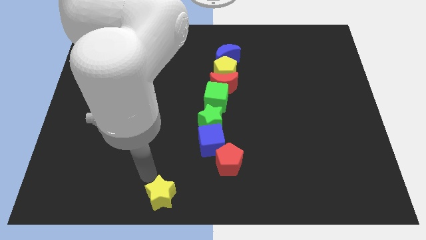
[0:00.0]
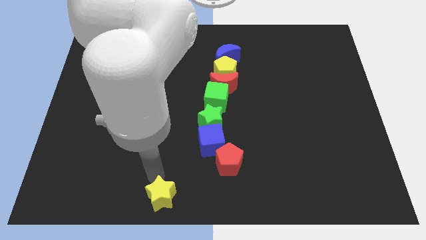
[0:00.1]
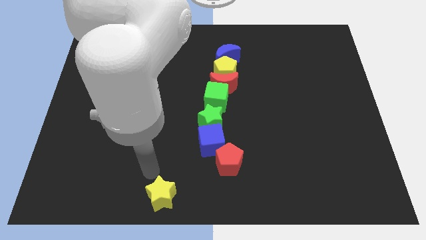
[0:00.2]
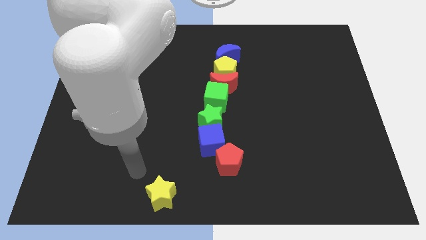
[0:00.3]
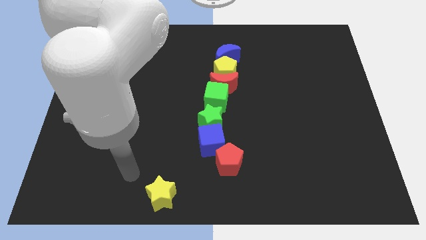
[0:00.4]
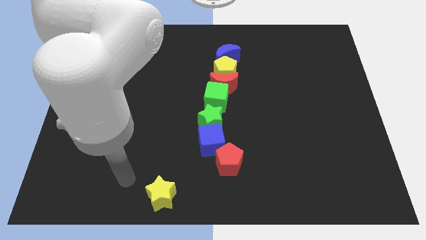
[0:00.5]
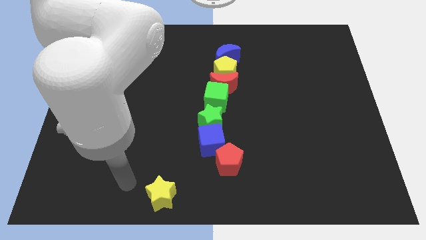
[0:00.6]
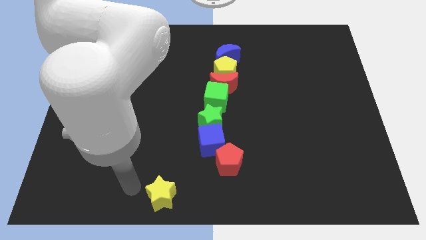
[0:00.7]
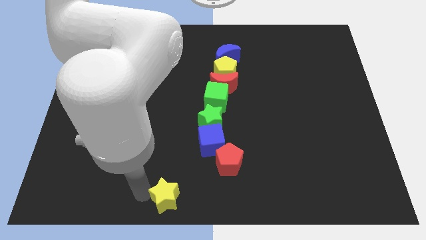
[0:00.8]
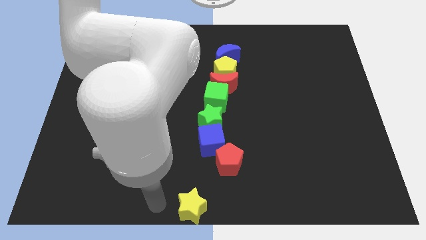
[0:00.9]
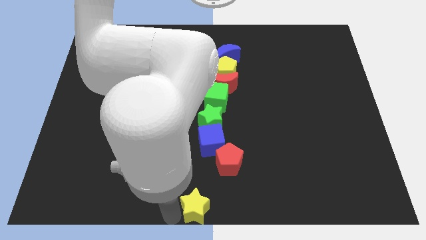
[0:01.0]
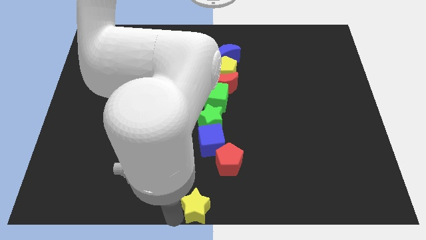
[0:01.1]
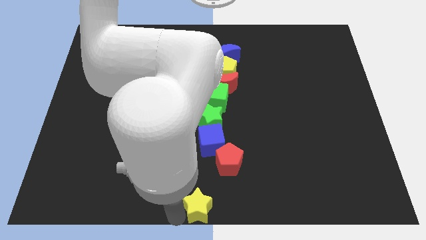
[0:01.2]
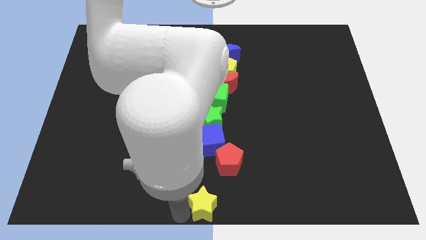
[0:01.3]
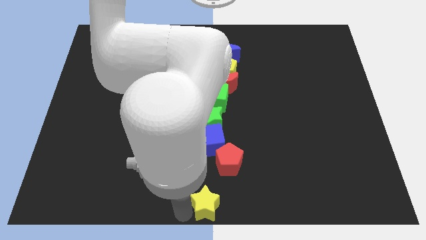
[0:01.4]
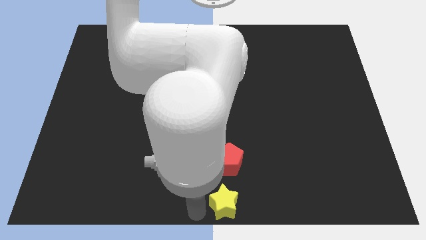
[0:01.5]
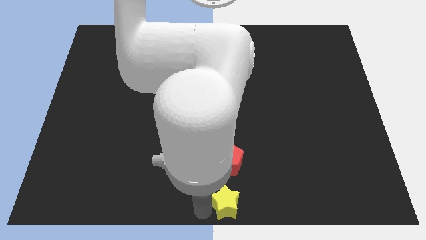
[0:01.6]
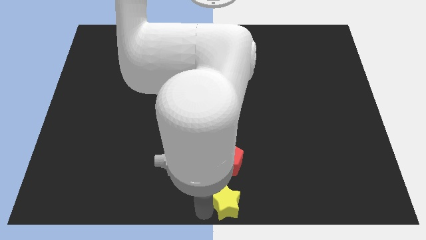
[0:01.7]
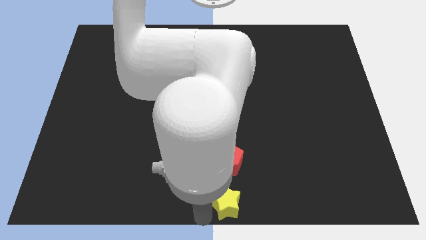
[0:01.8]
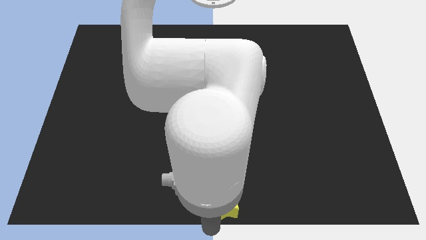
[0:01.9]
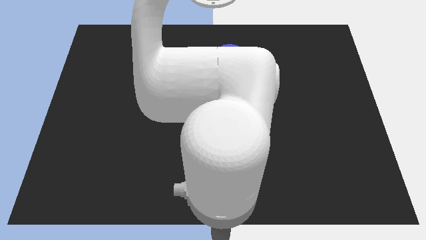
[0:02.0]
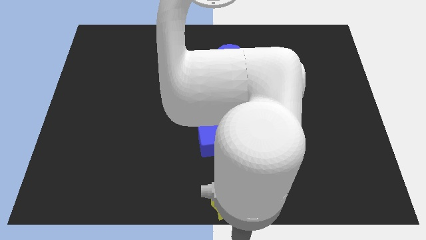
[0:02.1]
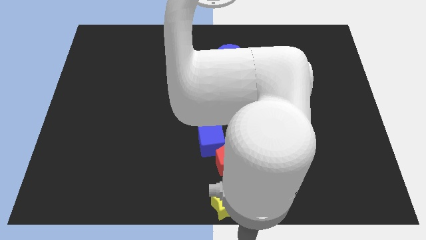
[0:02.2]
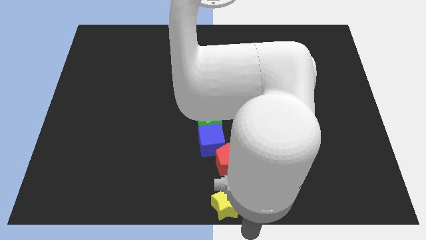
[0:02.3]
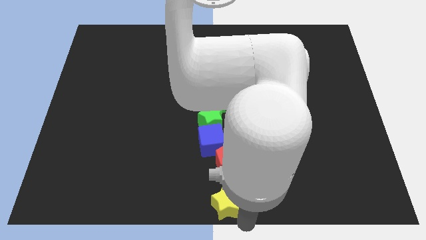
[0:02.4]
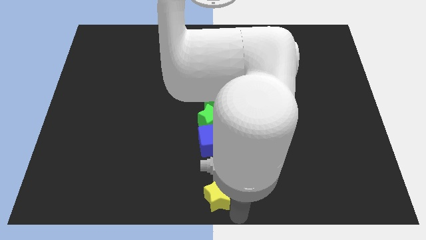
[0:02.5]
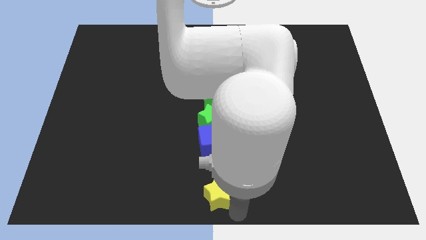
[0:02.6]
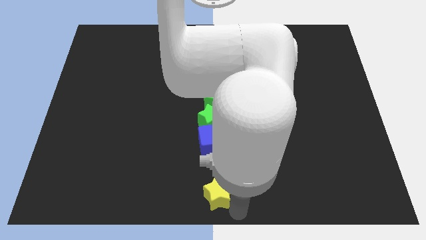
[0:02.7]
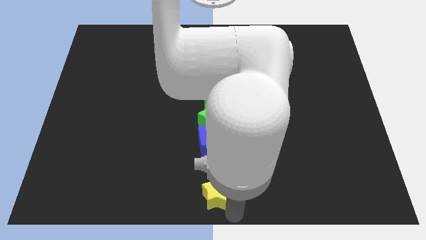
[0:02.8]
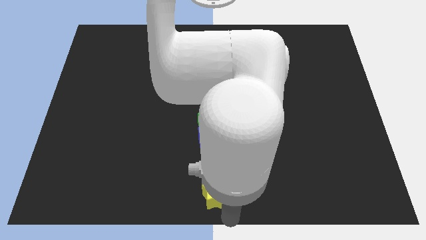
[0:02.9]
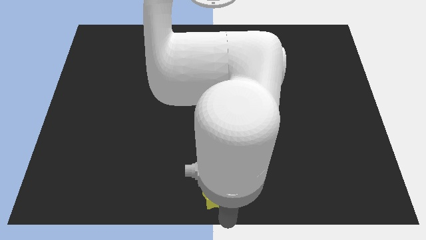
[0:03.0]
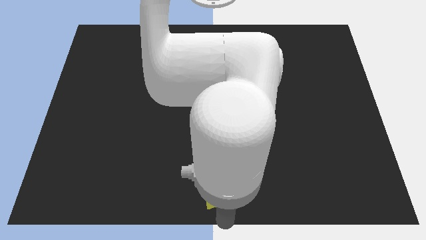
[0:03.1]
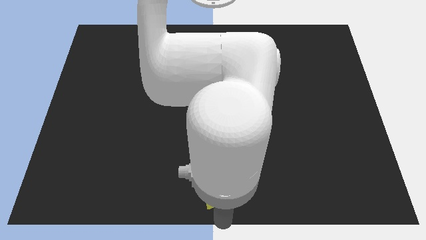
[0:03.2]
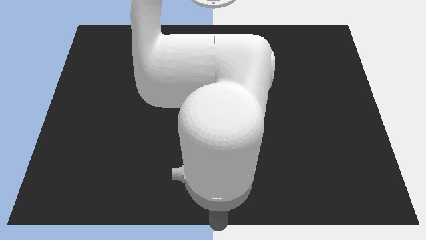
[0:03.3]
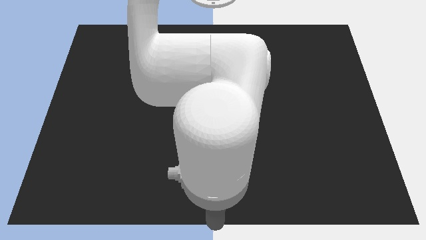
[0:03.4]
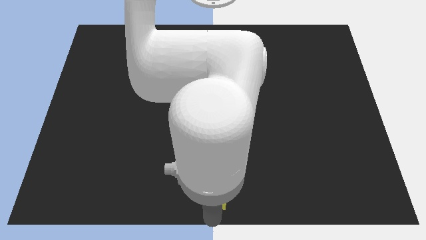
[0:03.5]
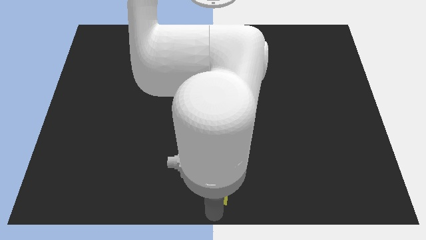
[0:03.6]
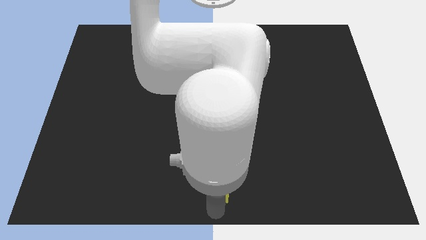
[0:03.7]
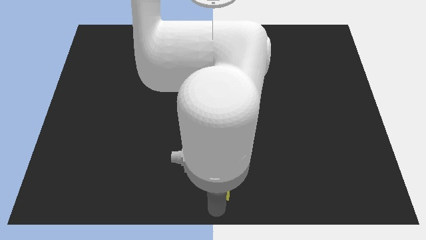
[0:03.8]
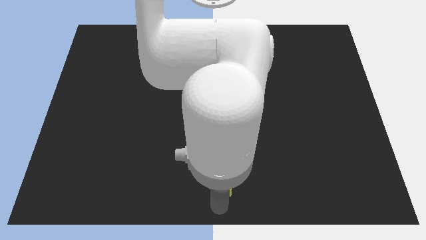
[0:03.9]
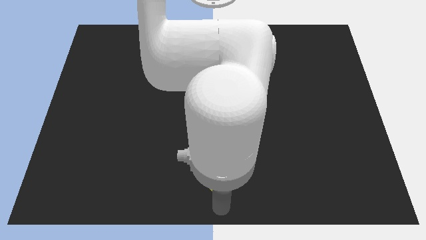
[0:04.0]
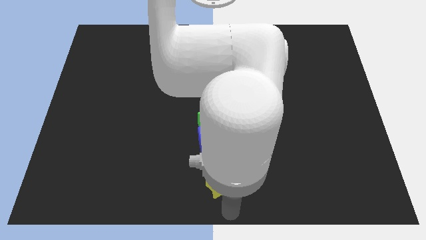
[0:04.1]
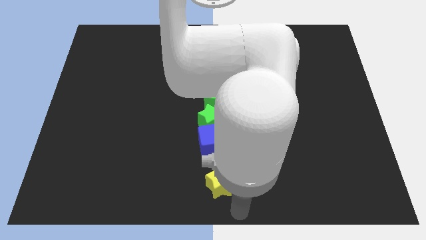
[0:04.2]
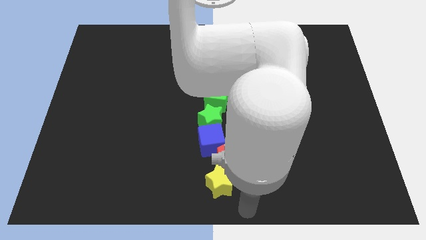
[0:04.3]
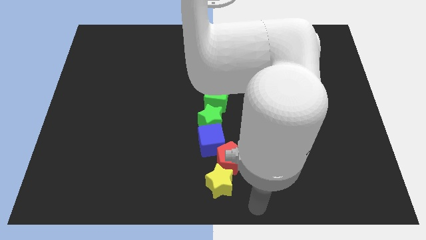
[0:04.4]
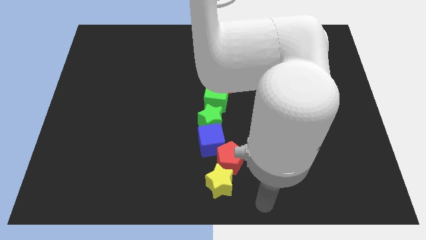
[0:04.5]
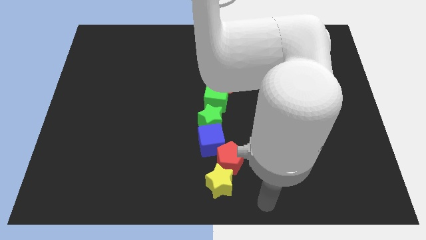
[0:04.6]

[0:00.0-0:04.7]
push the yellow star to the bottom of the red crescent

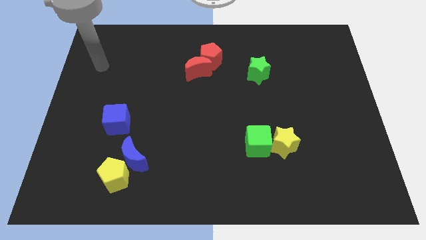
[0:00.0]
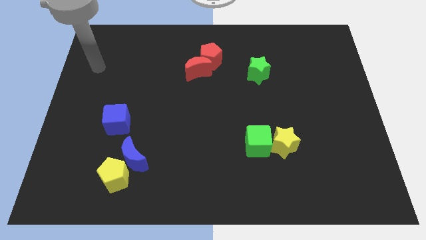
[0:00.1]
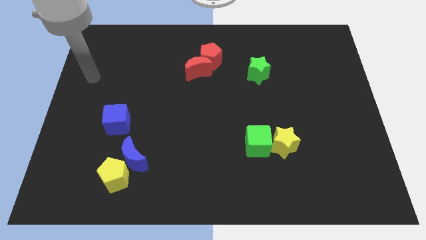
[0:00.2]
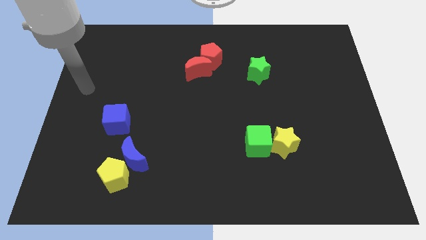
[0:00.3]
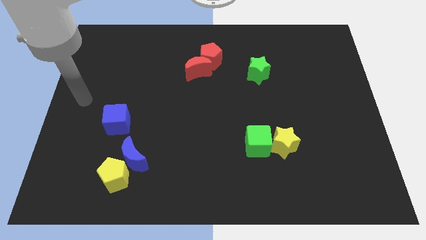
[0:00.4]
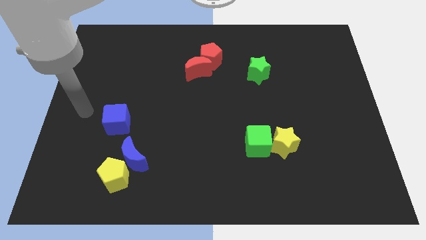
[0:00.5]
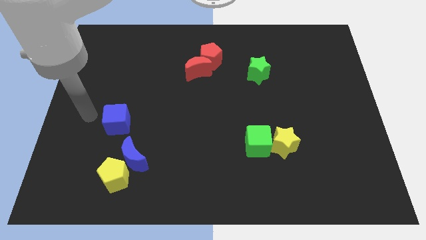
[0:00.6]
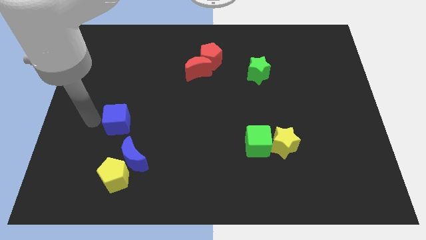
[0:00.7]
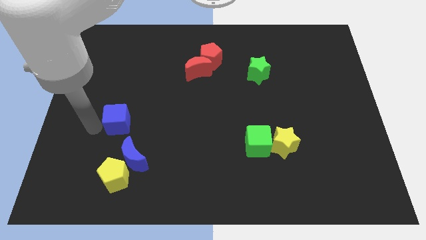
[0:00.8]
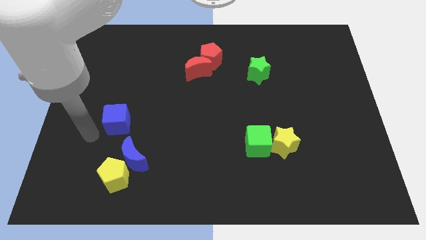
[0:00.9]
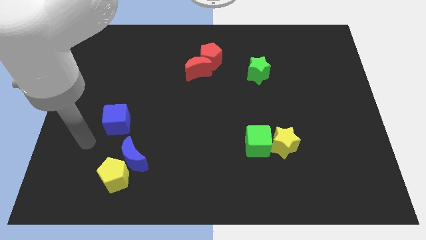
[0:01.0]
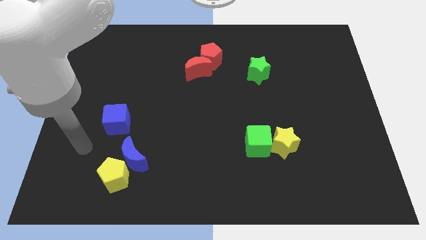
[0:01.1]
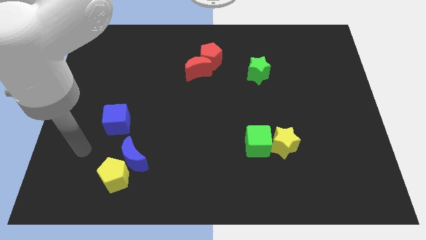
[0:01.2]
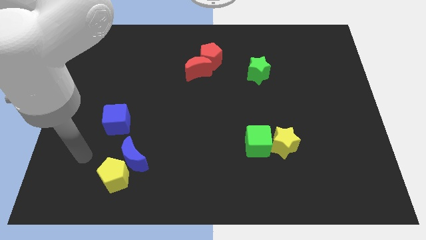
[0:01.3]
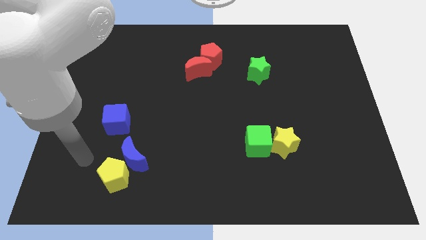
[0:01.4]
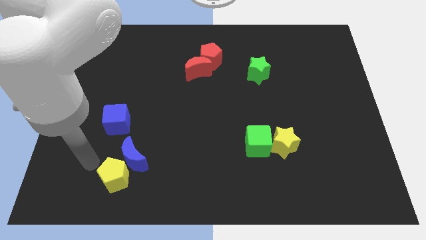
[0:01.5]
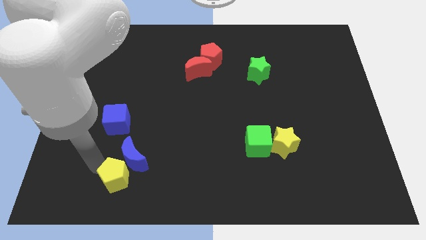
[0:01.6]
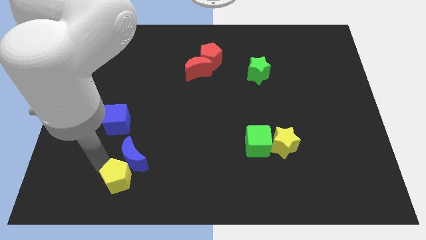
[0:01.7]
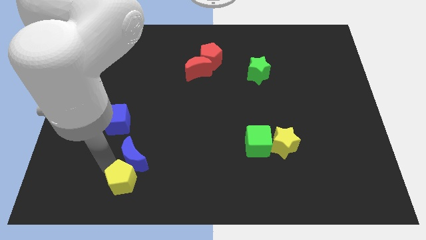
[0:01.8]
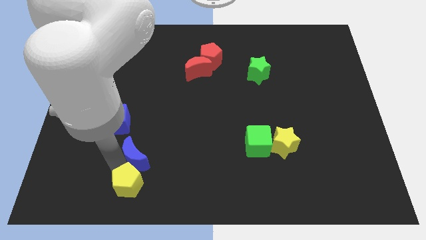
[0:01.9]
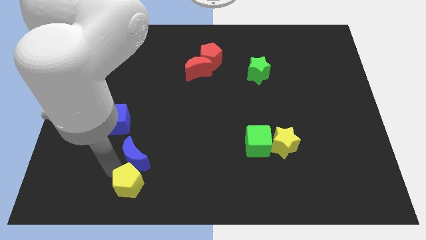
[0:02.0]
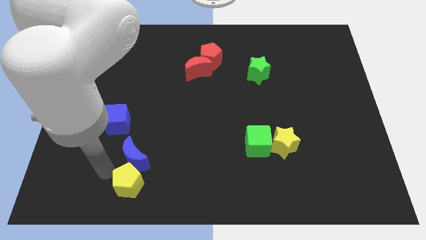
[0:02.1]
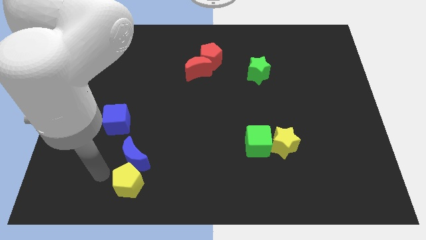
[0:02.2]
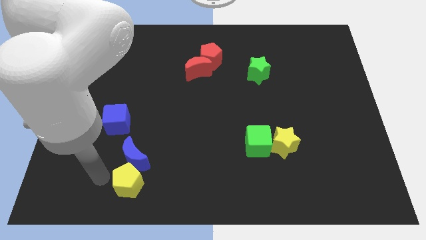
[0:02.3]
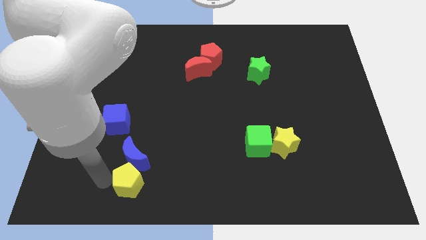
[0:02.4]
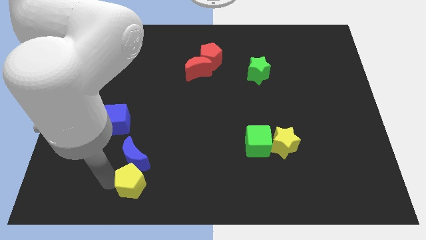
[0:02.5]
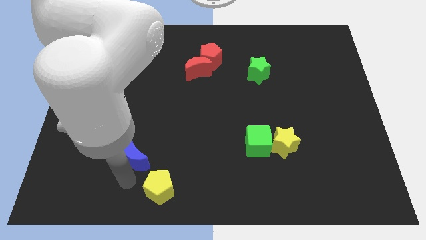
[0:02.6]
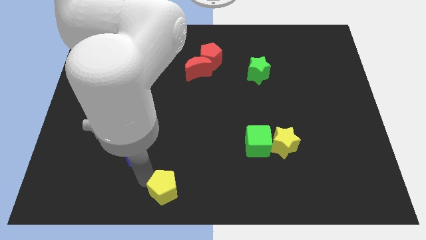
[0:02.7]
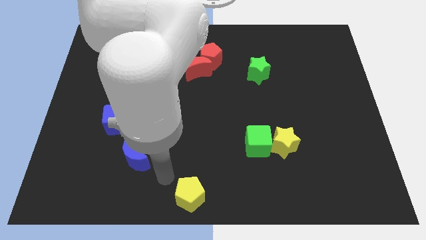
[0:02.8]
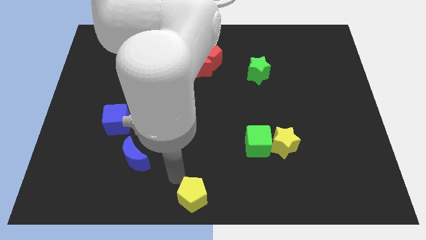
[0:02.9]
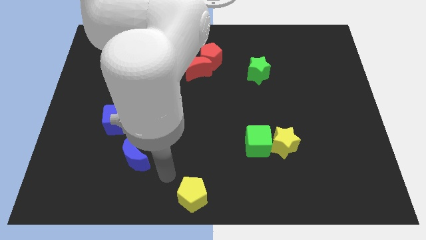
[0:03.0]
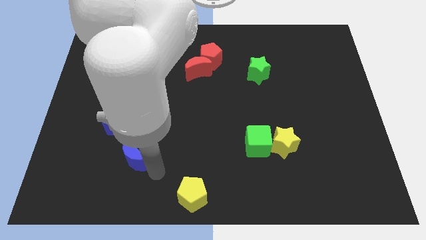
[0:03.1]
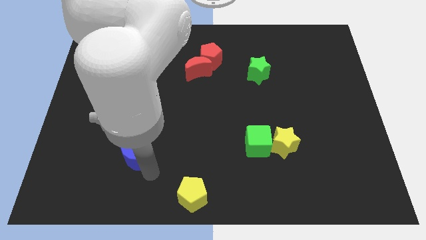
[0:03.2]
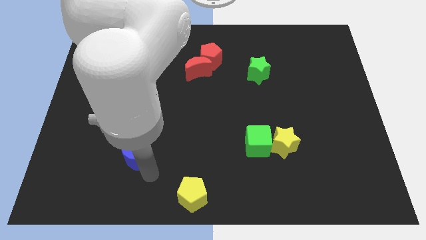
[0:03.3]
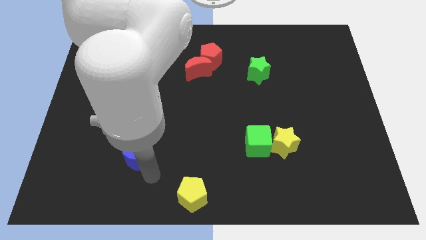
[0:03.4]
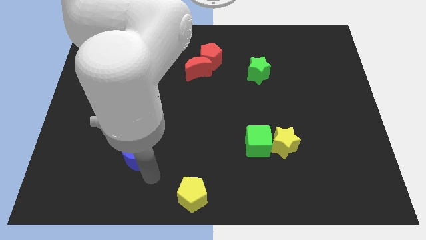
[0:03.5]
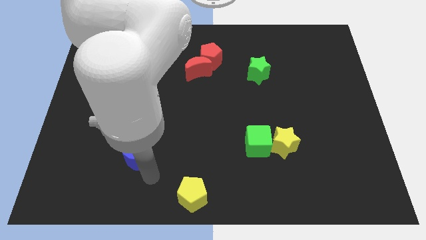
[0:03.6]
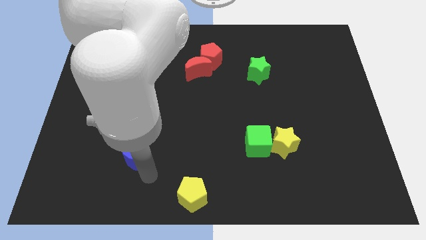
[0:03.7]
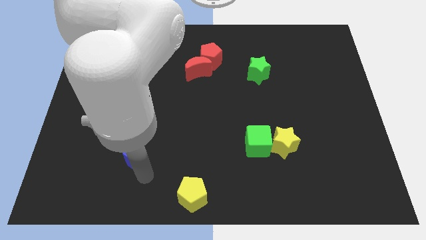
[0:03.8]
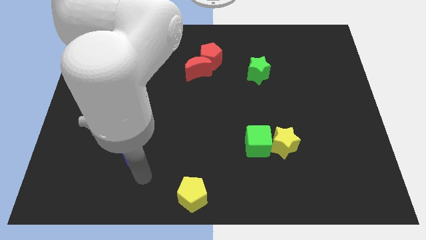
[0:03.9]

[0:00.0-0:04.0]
separate the yellow pentagon from the blue moon

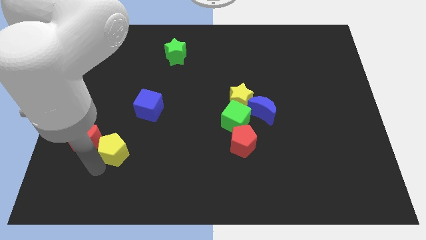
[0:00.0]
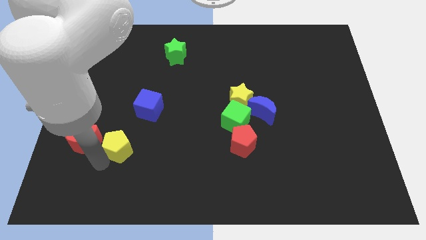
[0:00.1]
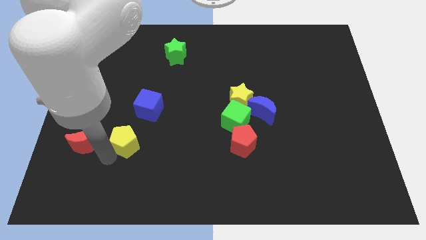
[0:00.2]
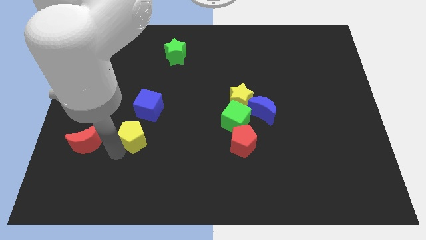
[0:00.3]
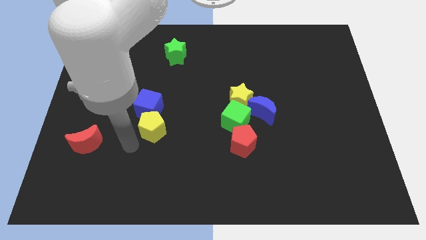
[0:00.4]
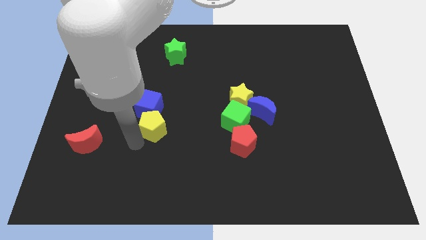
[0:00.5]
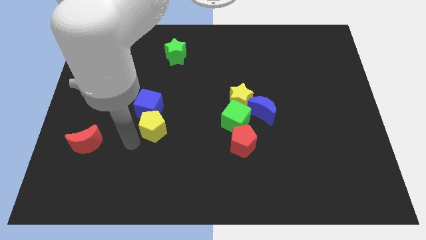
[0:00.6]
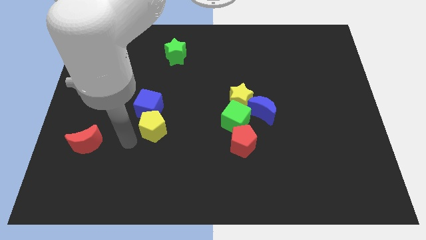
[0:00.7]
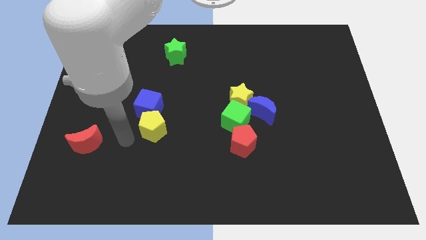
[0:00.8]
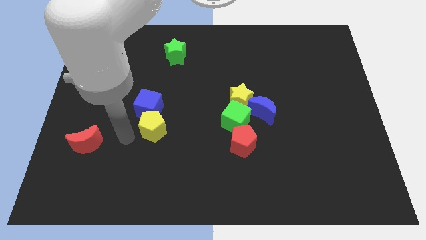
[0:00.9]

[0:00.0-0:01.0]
push the yellow pentagon into the blue cube
